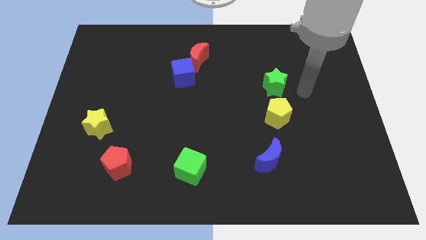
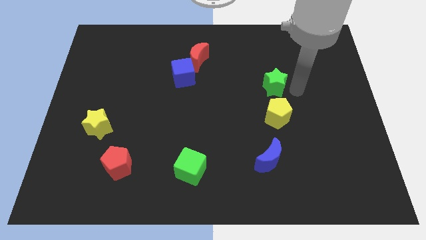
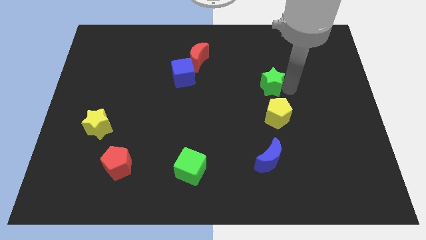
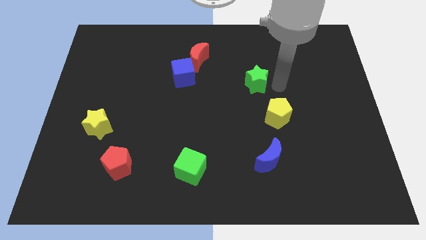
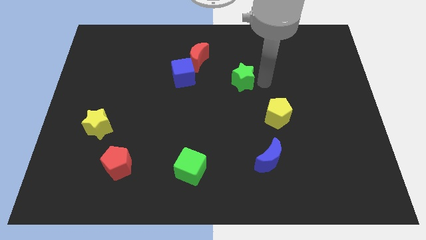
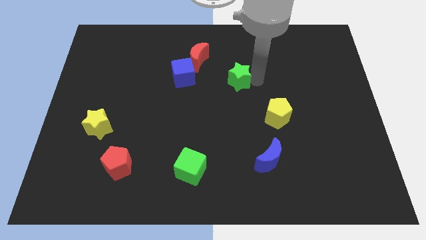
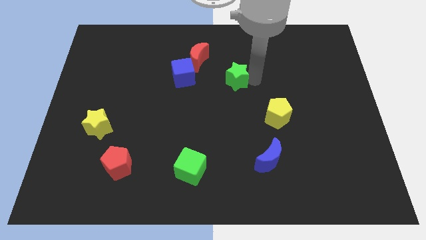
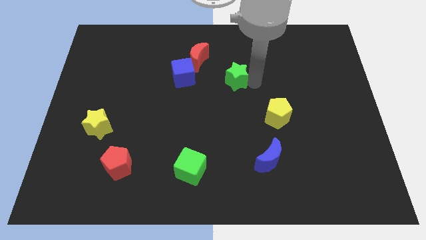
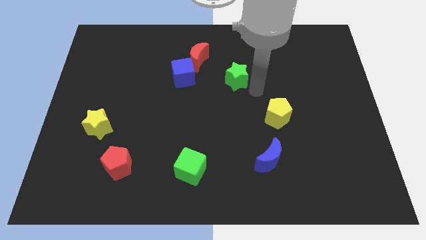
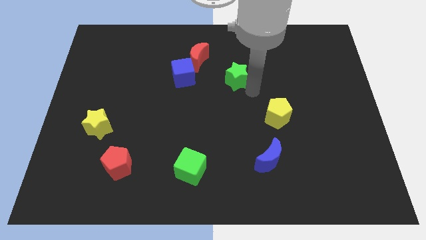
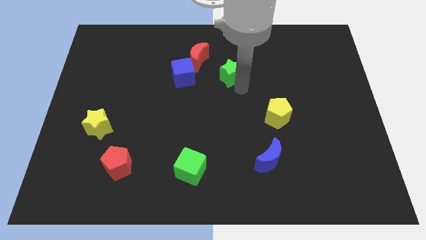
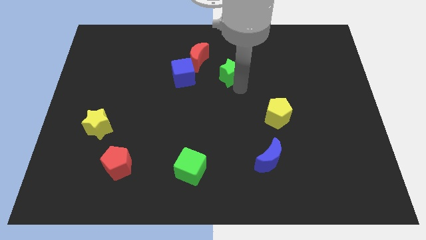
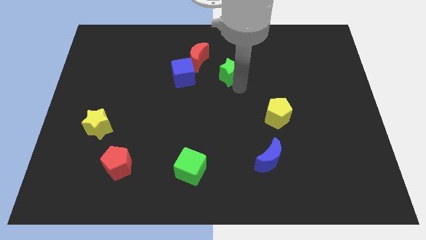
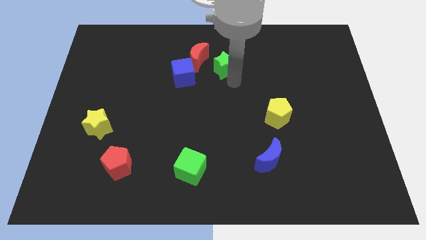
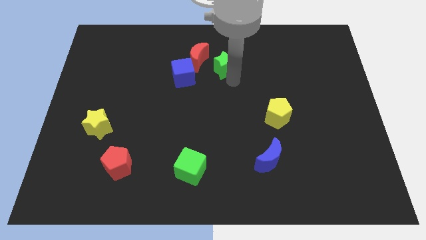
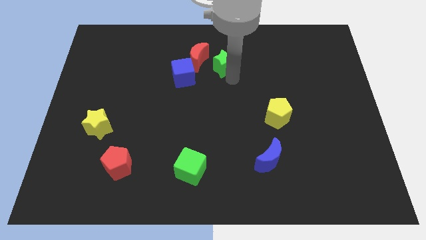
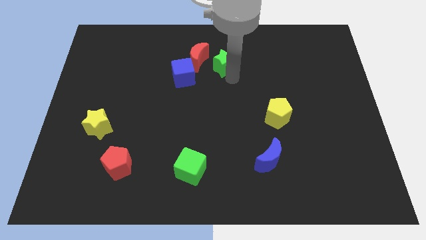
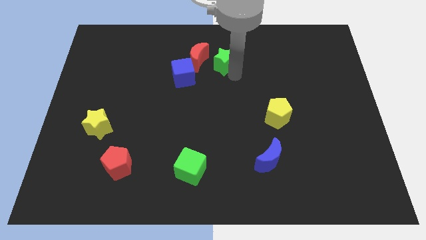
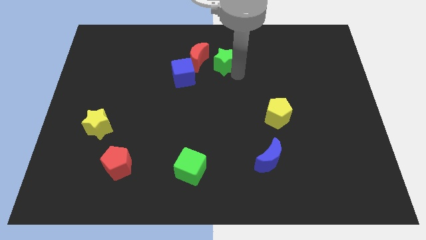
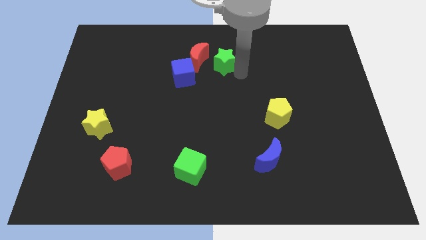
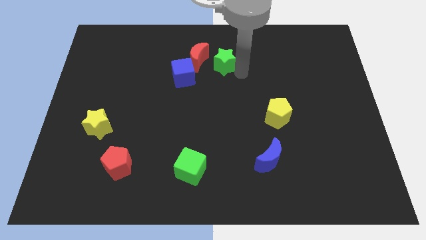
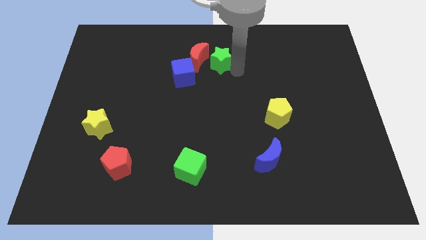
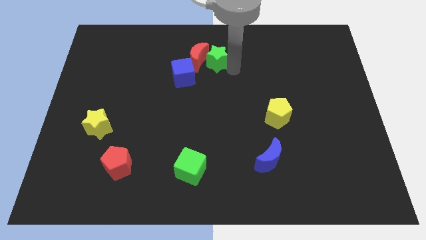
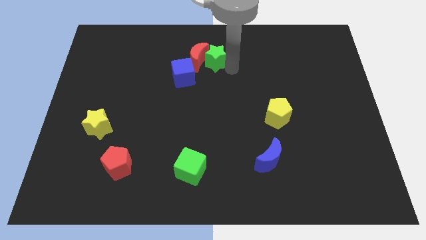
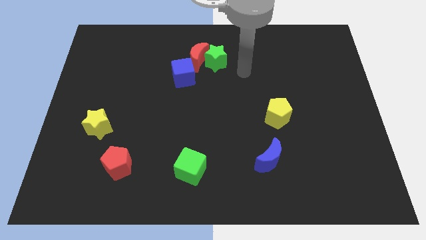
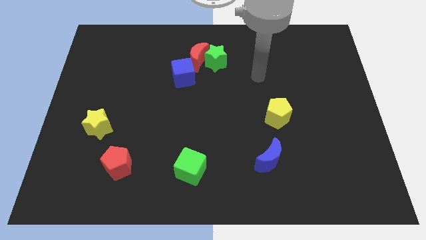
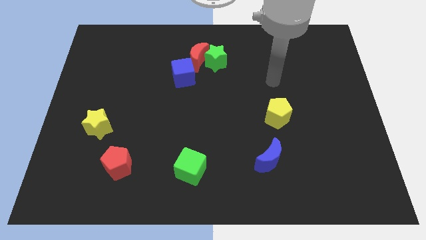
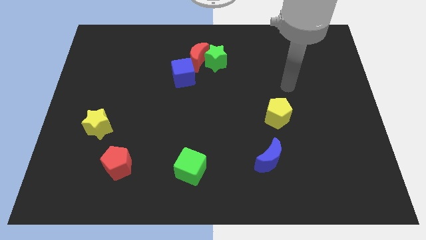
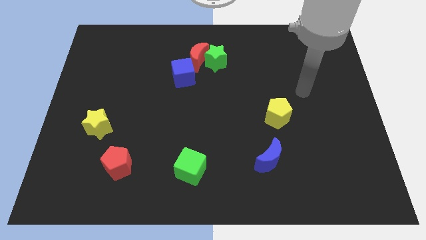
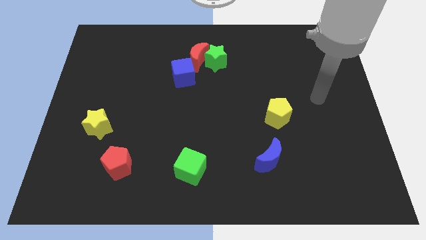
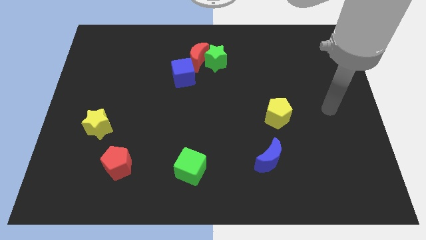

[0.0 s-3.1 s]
push the green star towards the top center

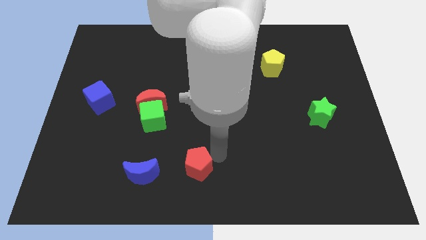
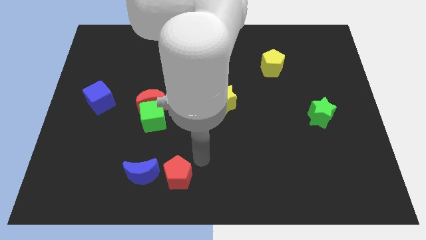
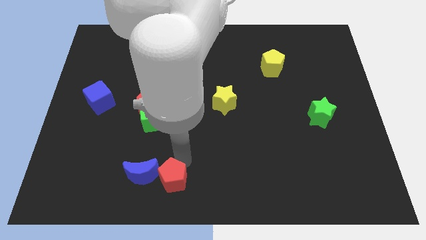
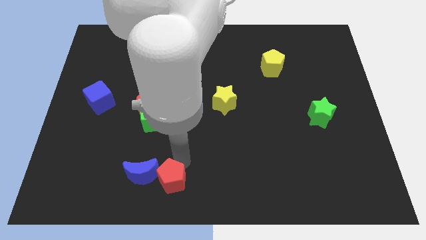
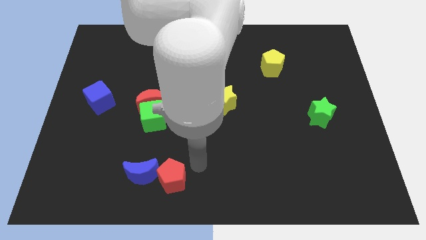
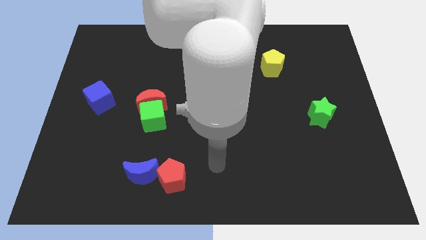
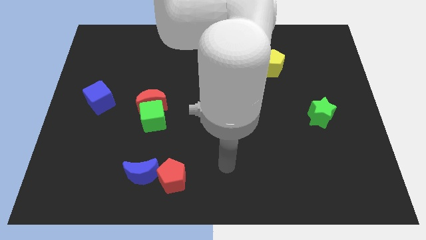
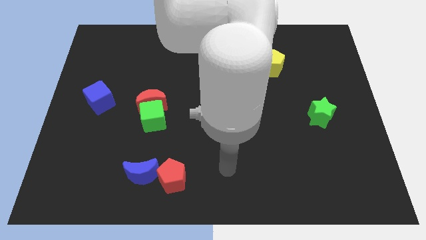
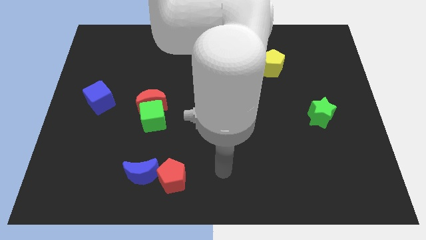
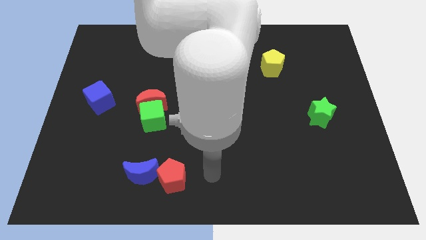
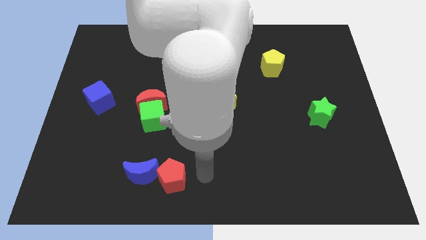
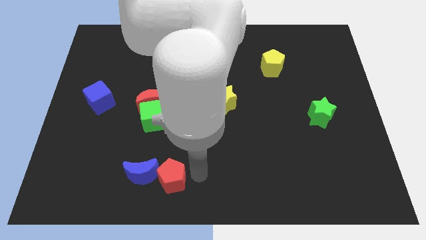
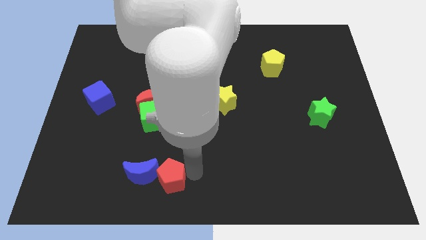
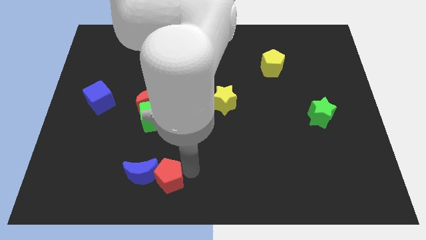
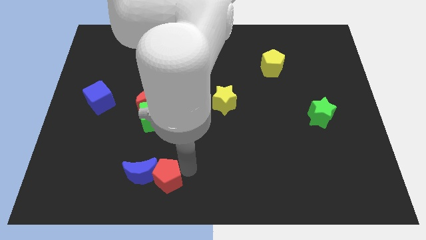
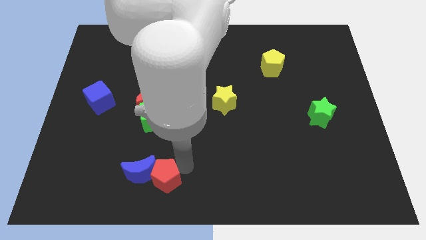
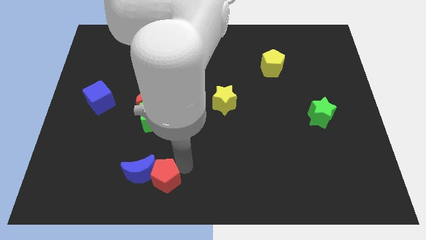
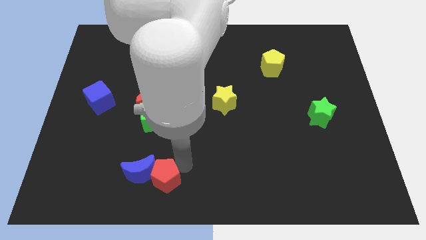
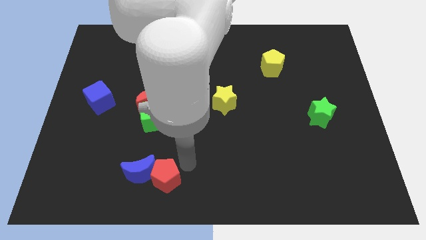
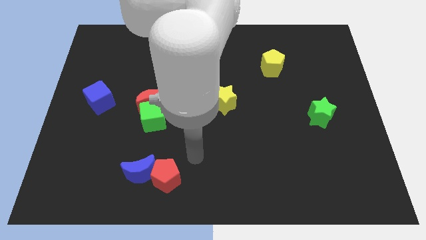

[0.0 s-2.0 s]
place the red pentagon to the right of blue crescent

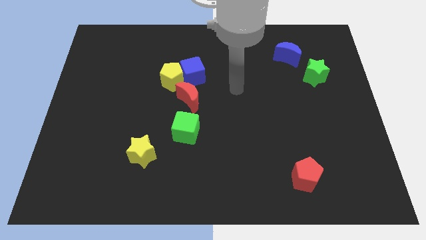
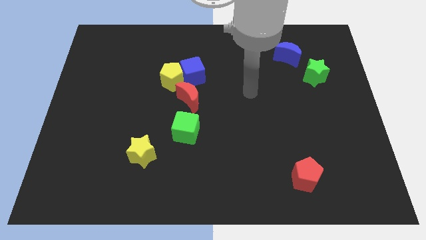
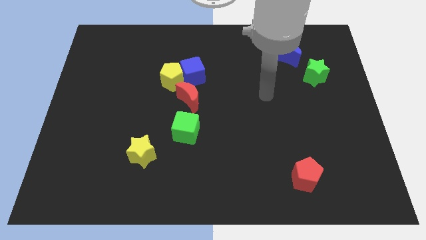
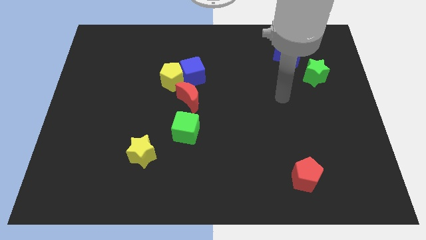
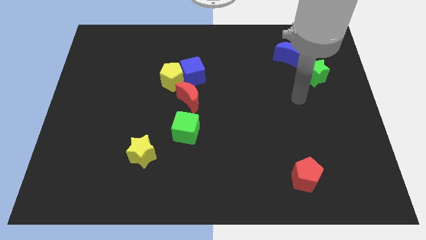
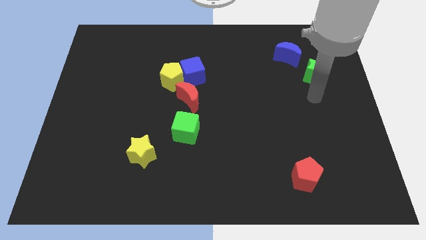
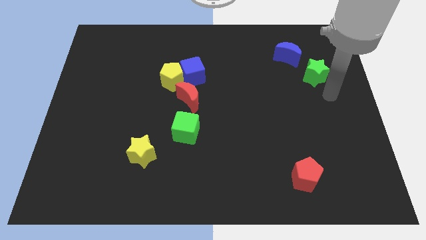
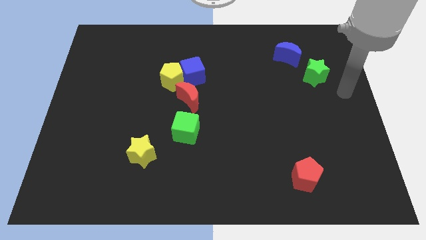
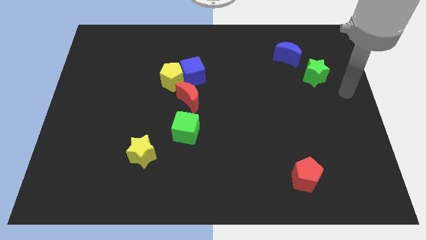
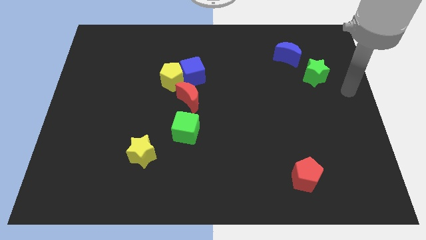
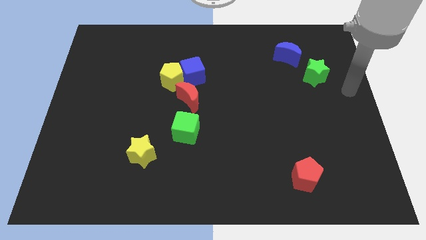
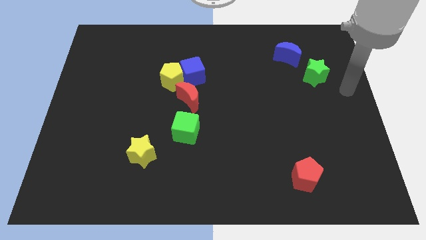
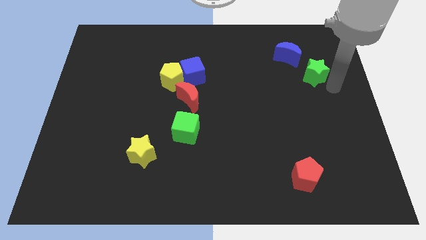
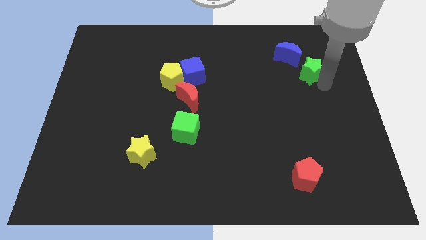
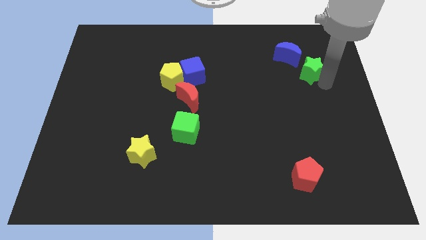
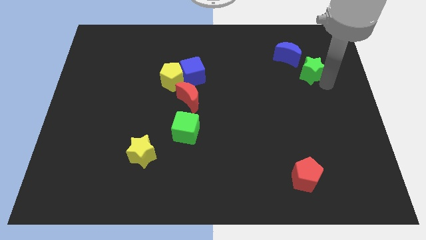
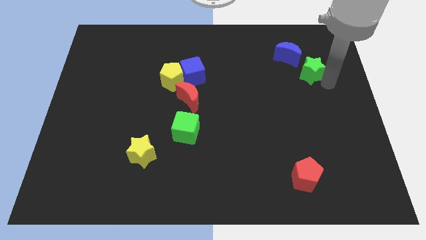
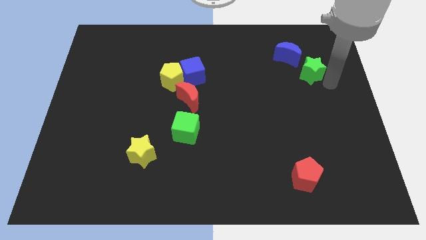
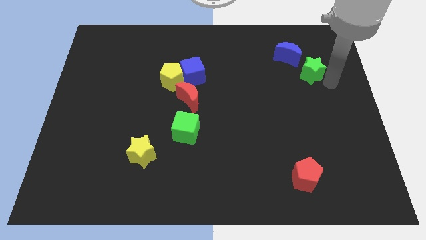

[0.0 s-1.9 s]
slightly push the green star to the blue moon

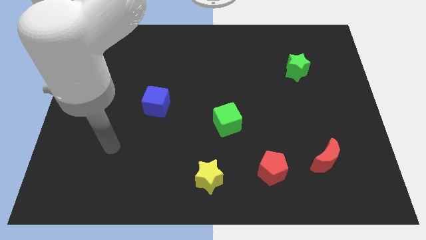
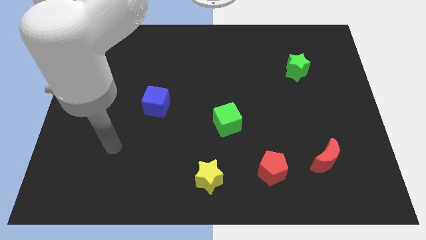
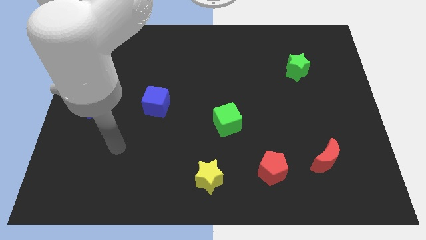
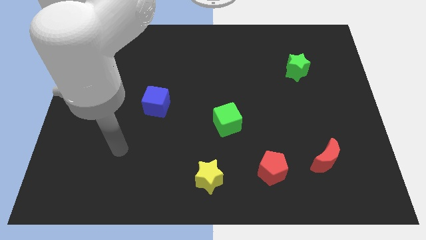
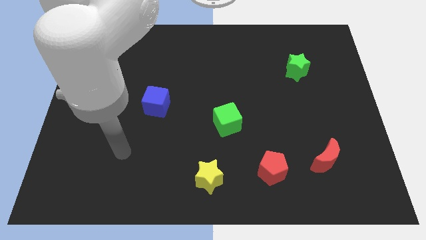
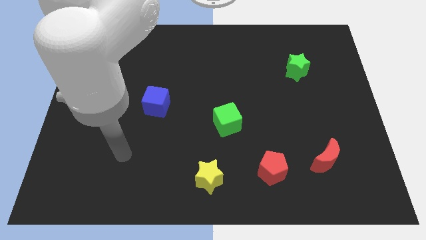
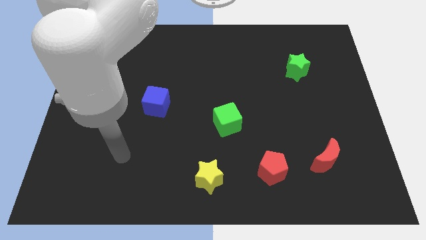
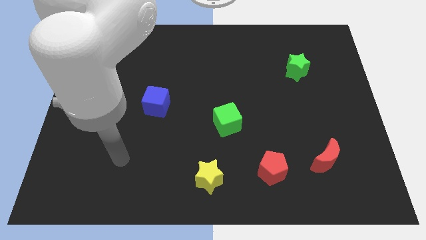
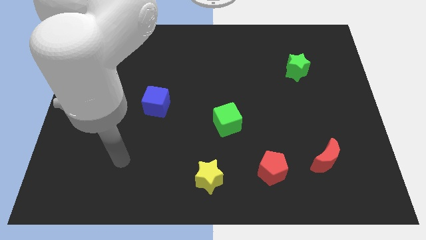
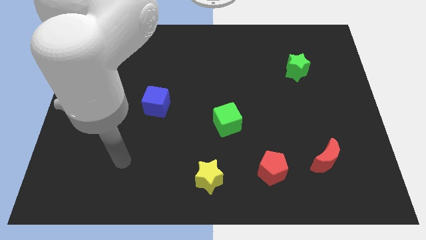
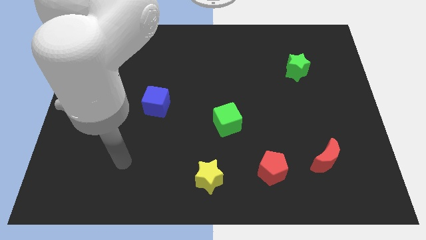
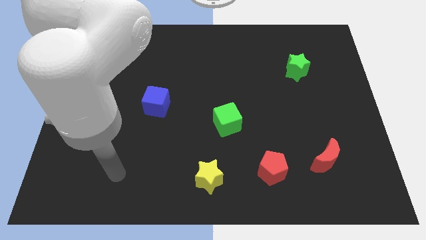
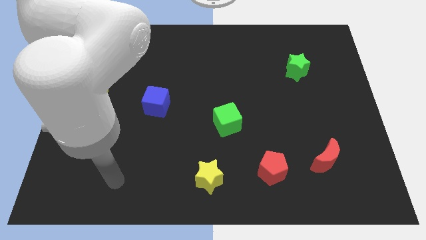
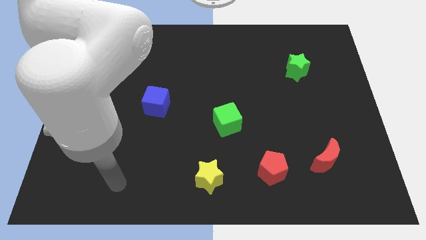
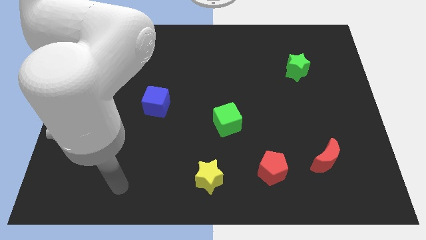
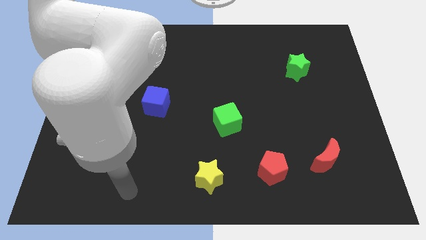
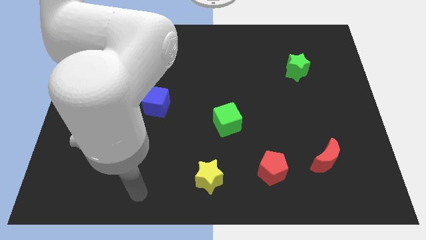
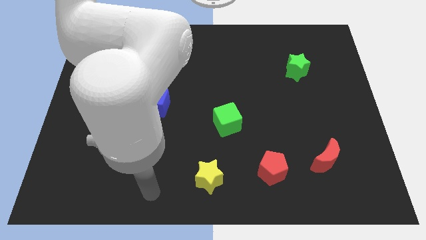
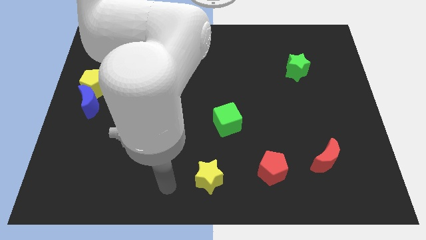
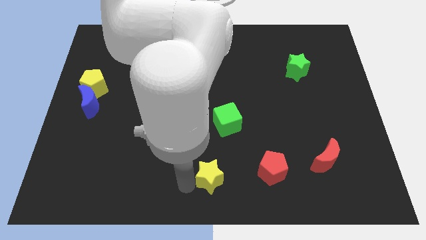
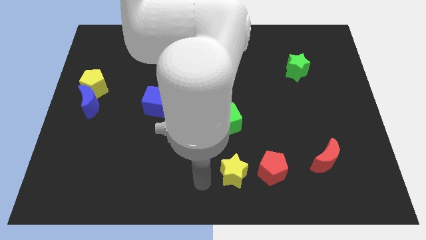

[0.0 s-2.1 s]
push the yellow star towards the red pentagon
